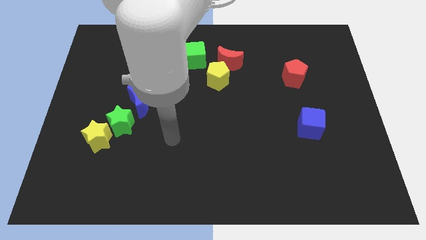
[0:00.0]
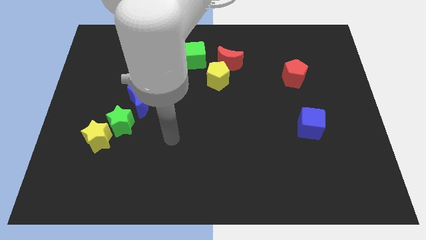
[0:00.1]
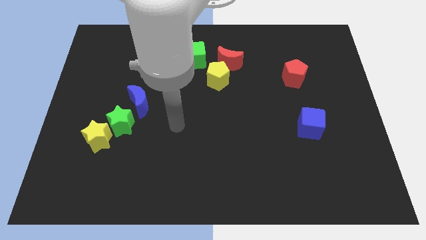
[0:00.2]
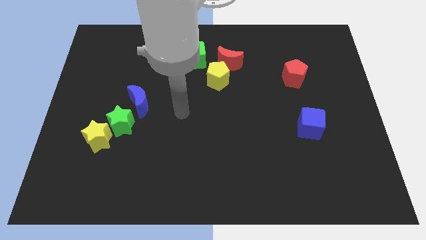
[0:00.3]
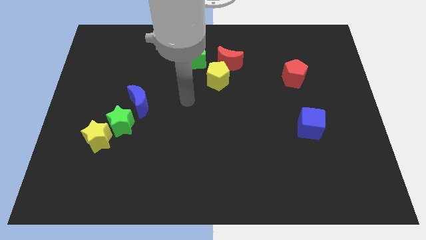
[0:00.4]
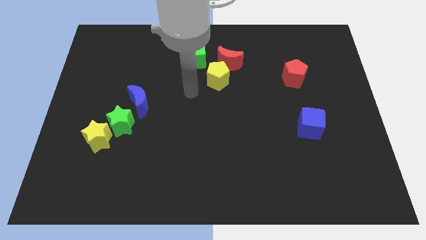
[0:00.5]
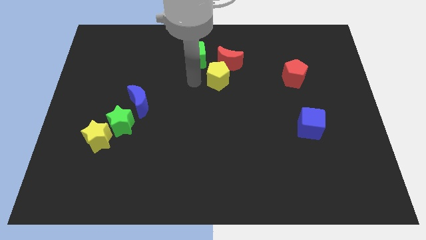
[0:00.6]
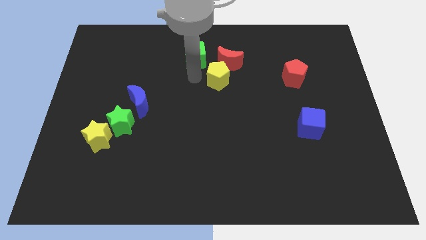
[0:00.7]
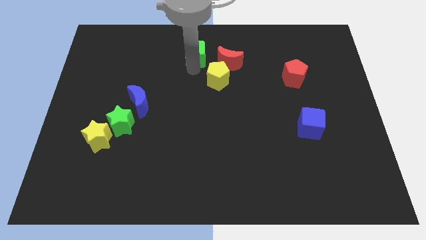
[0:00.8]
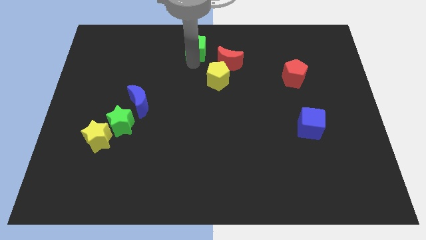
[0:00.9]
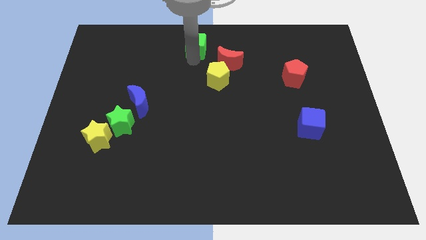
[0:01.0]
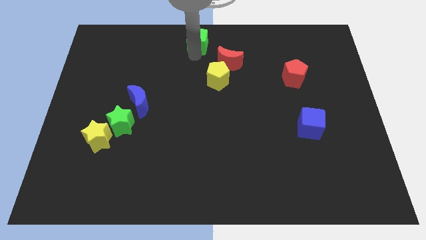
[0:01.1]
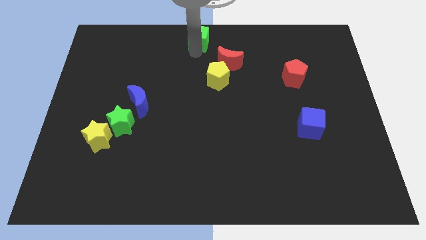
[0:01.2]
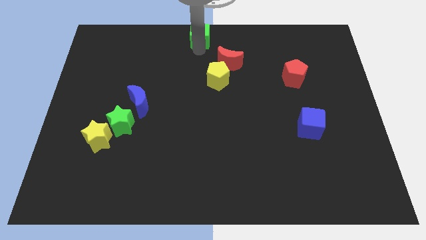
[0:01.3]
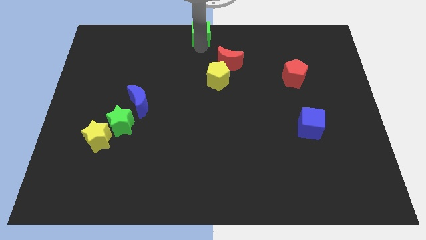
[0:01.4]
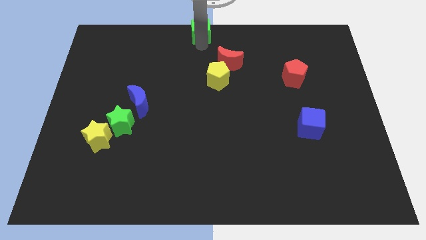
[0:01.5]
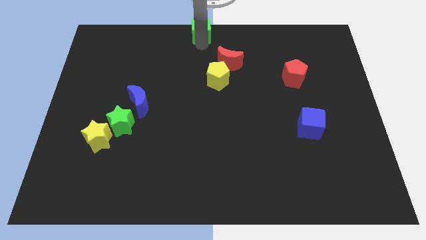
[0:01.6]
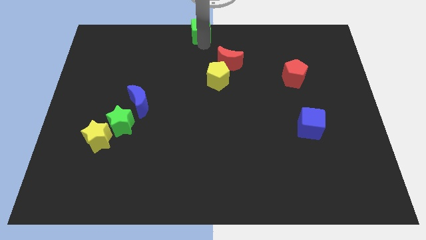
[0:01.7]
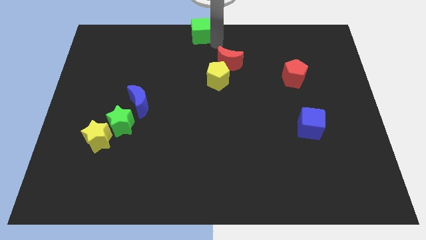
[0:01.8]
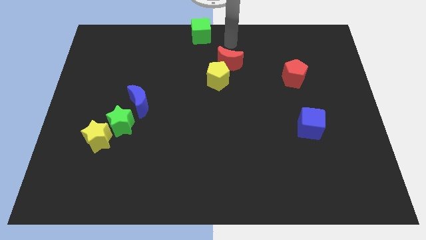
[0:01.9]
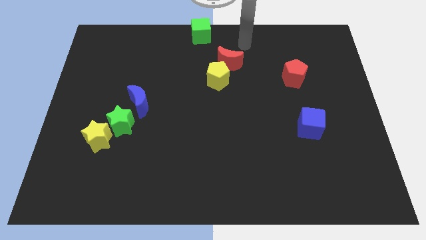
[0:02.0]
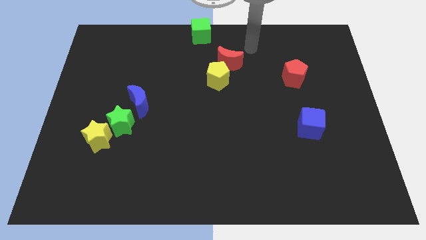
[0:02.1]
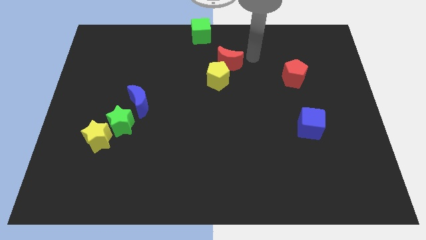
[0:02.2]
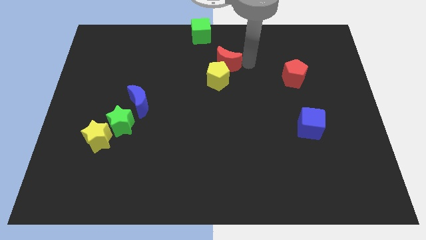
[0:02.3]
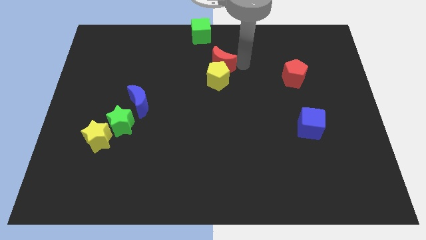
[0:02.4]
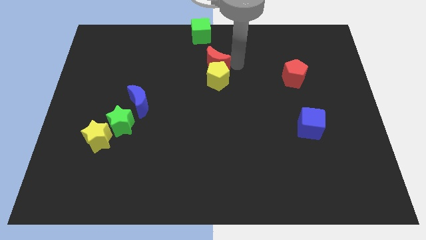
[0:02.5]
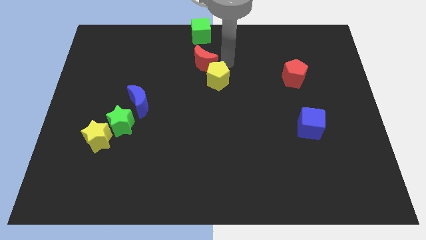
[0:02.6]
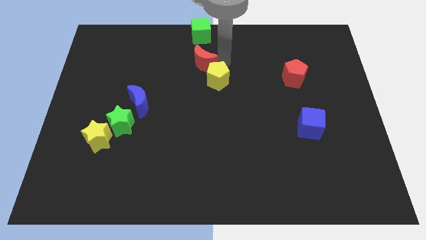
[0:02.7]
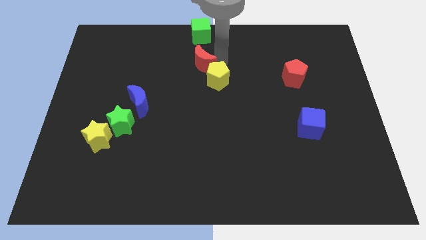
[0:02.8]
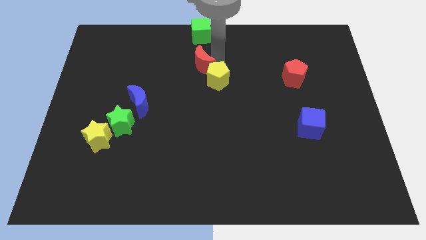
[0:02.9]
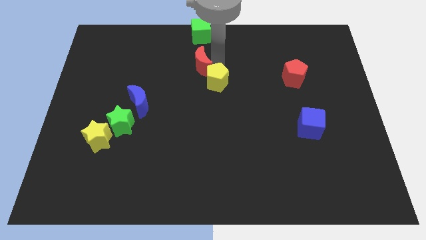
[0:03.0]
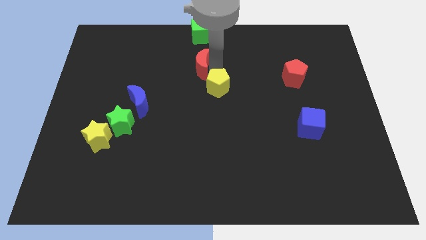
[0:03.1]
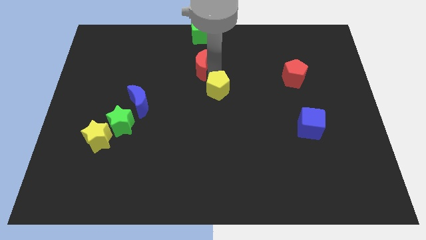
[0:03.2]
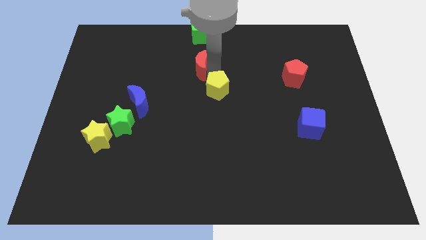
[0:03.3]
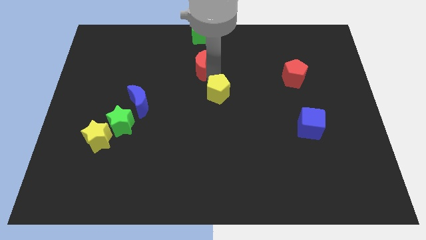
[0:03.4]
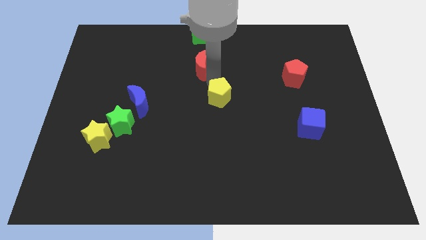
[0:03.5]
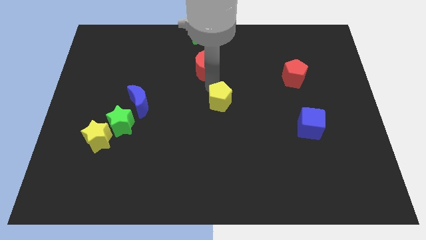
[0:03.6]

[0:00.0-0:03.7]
place the yellow pentagon green cube and red crescent in a vertical line

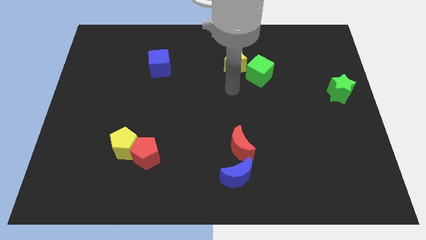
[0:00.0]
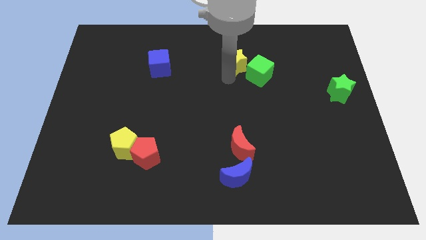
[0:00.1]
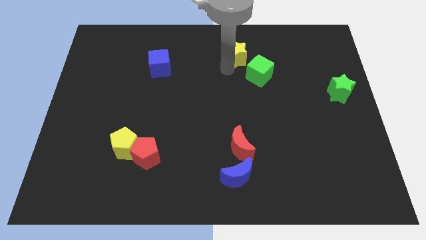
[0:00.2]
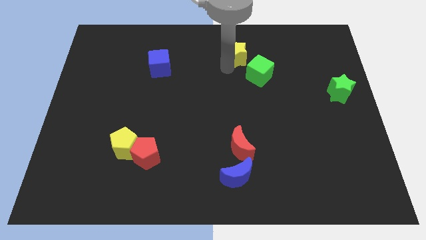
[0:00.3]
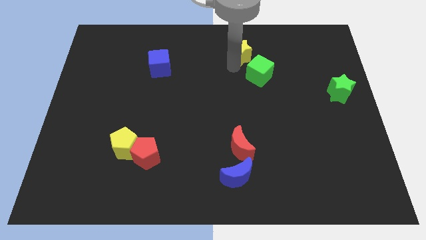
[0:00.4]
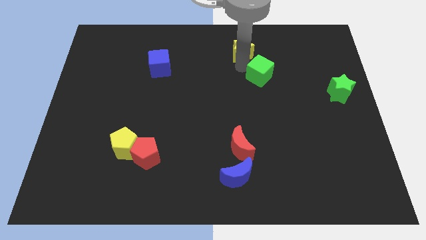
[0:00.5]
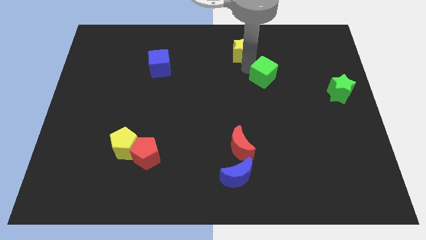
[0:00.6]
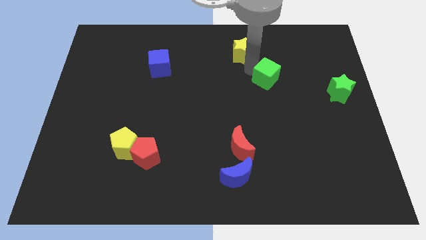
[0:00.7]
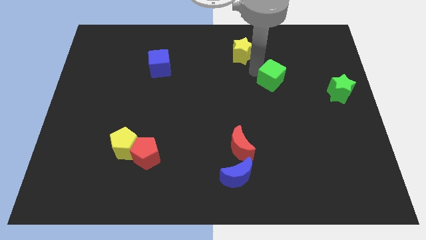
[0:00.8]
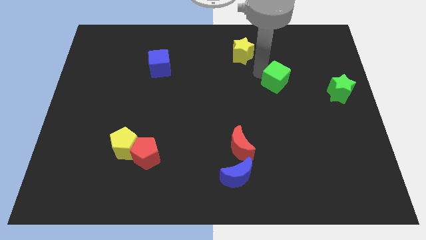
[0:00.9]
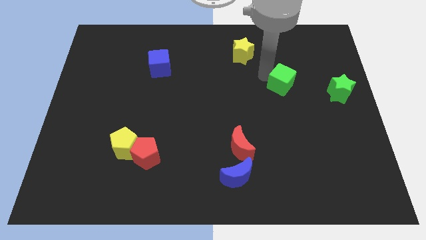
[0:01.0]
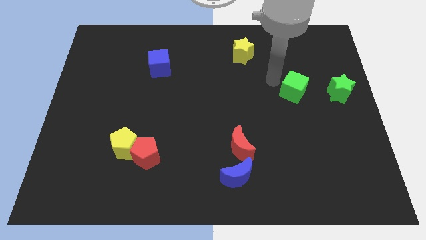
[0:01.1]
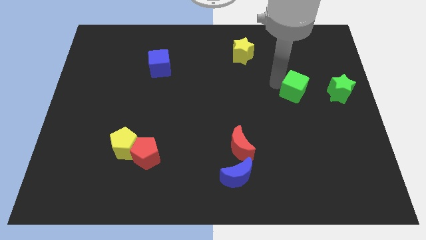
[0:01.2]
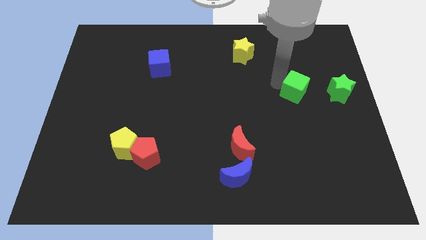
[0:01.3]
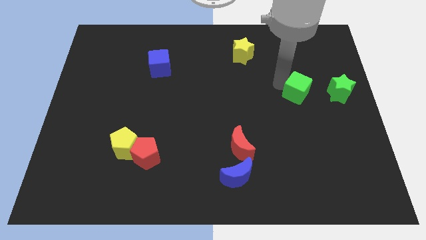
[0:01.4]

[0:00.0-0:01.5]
separate yellow star and the green cube

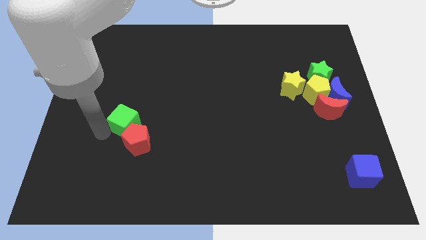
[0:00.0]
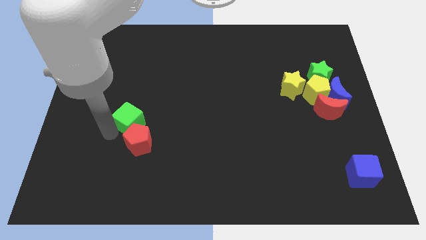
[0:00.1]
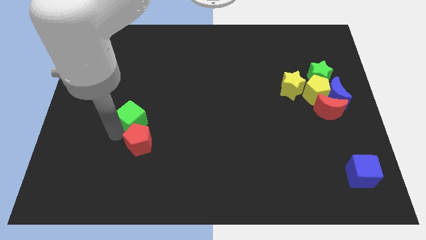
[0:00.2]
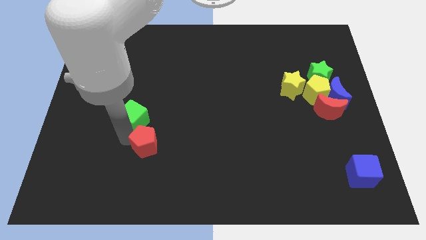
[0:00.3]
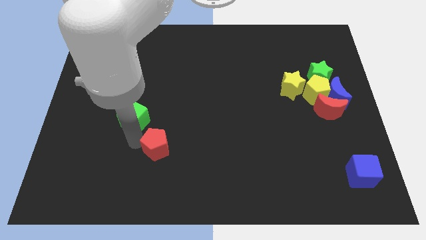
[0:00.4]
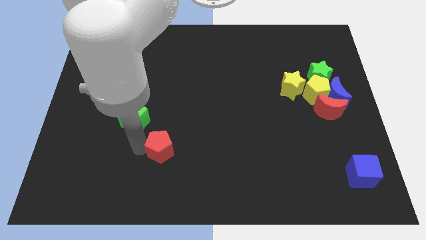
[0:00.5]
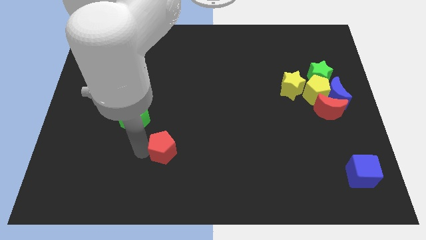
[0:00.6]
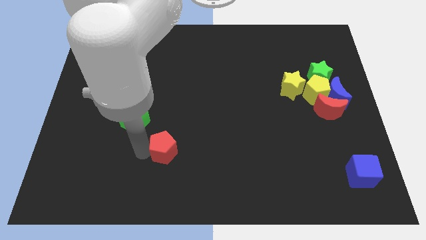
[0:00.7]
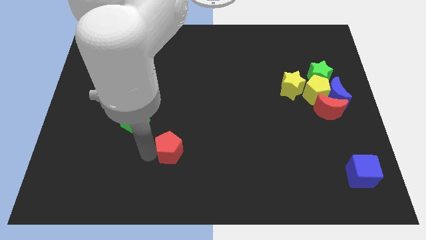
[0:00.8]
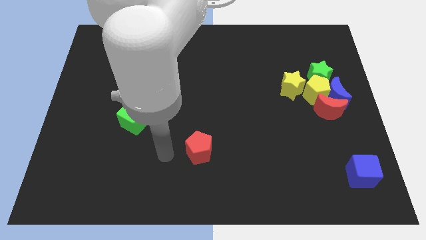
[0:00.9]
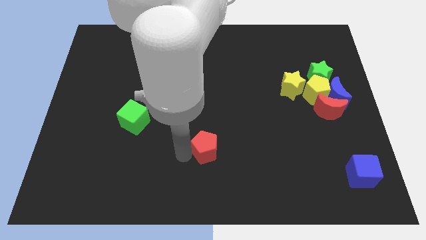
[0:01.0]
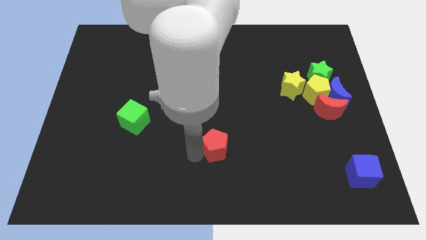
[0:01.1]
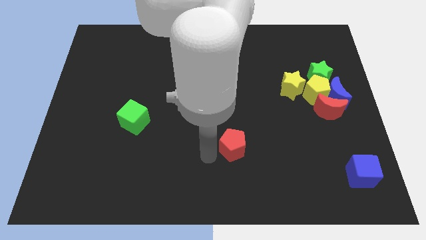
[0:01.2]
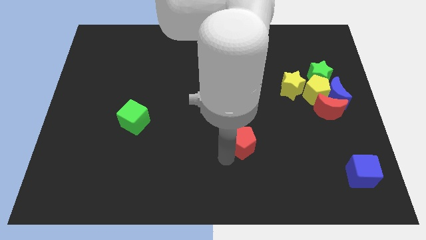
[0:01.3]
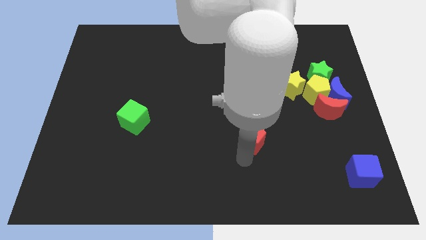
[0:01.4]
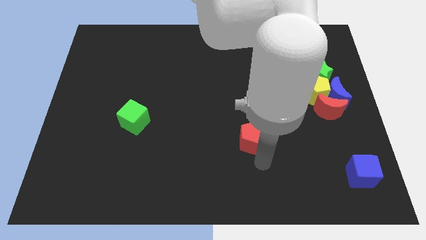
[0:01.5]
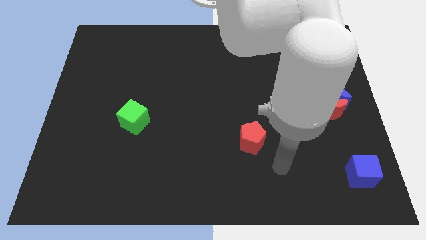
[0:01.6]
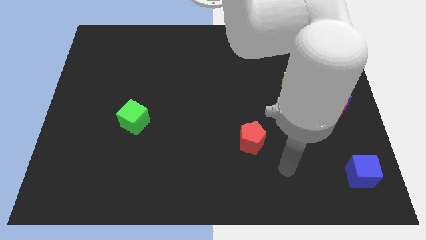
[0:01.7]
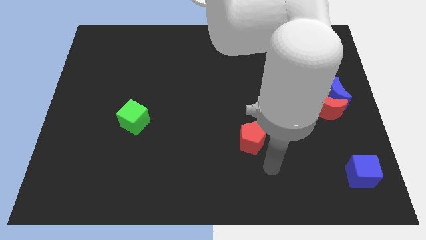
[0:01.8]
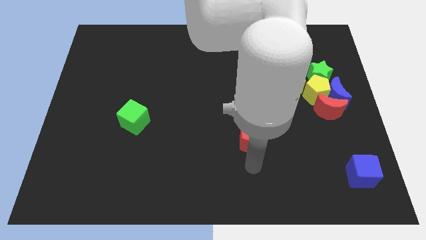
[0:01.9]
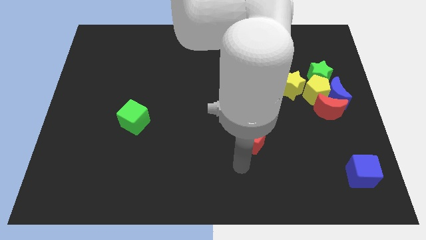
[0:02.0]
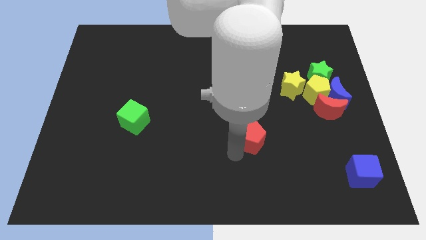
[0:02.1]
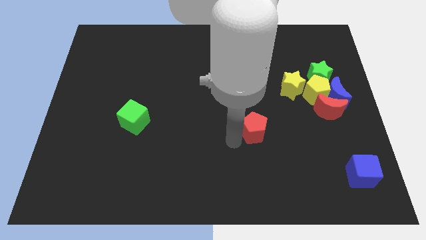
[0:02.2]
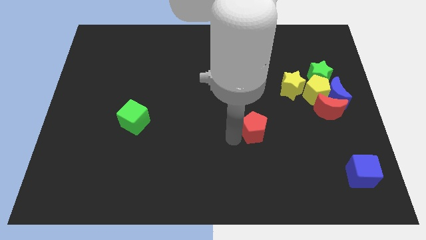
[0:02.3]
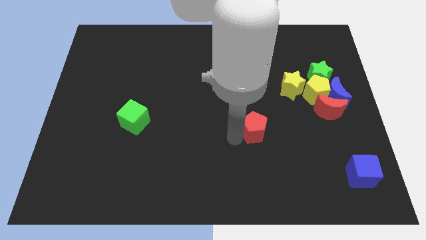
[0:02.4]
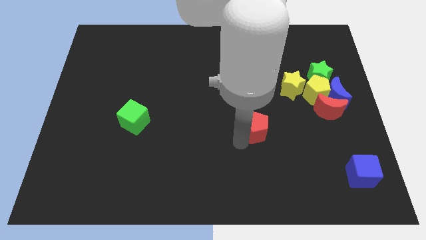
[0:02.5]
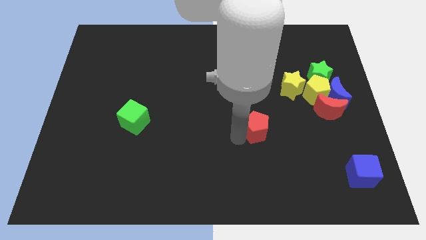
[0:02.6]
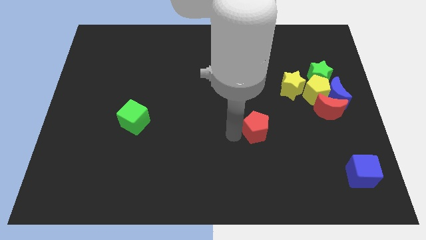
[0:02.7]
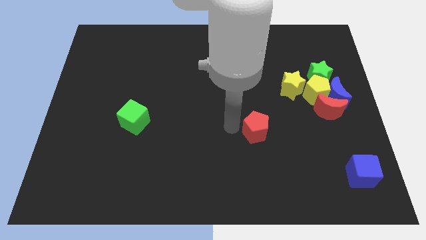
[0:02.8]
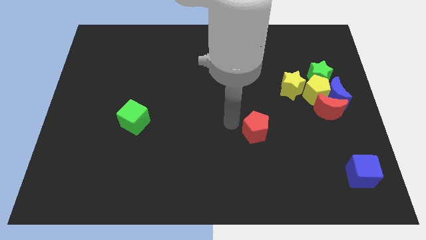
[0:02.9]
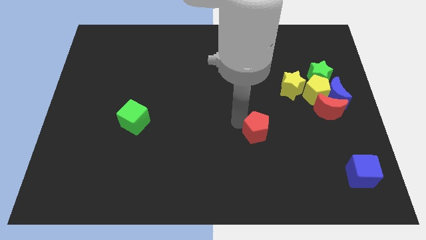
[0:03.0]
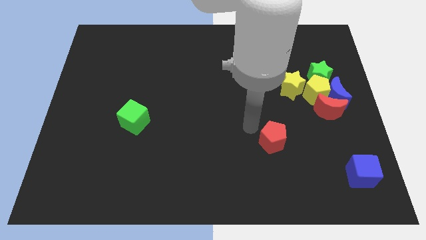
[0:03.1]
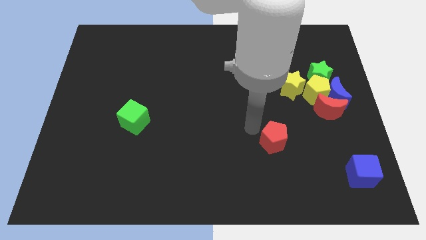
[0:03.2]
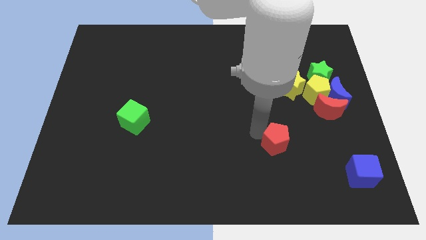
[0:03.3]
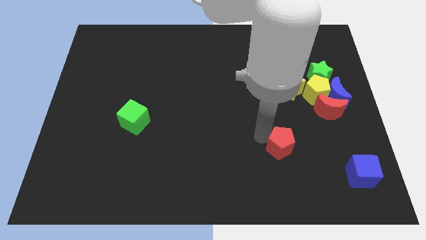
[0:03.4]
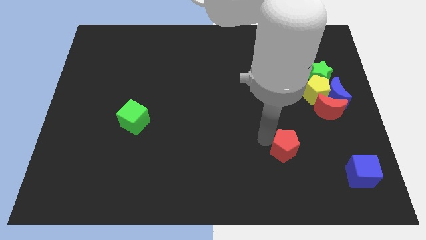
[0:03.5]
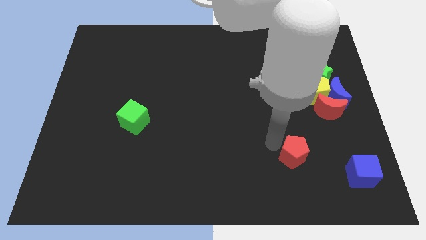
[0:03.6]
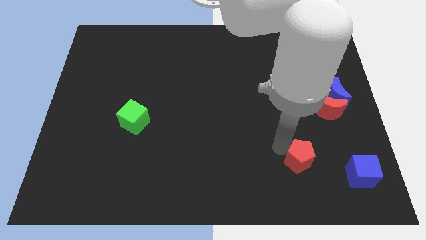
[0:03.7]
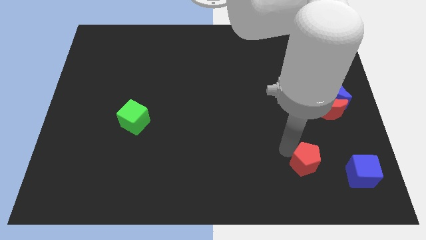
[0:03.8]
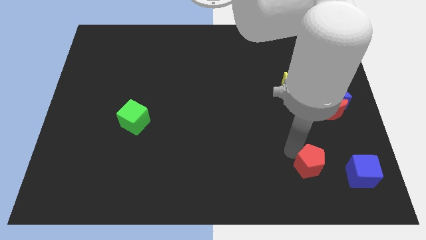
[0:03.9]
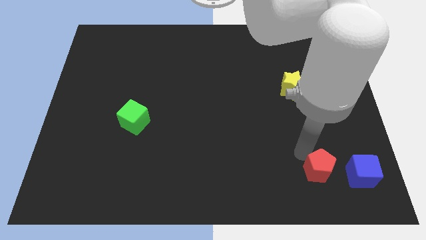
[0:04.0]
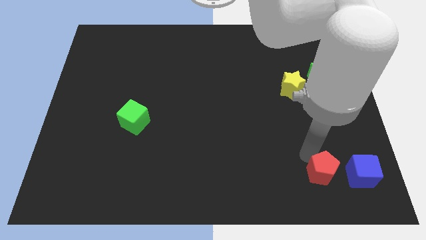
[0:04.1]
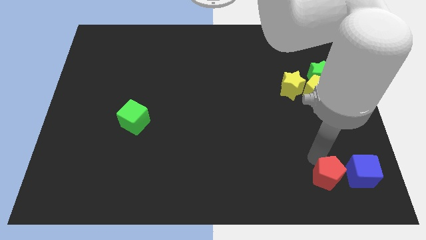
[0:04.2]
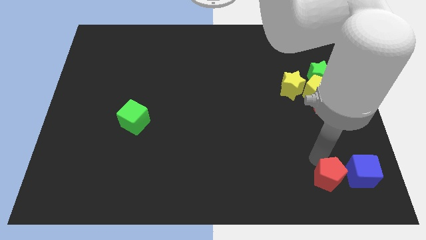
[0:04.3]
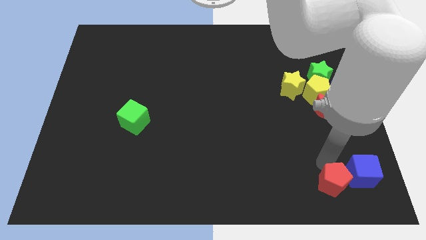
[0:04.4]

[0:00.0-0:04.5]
move the red pentagon close to the left side of the blue cube
